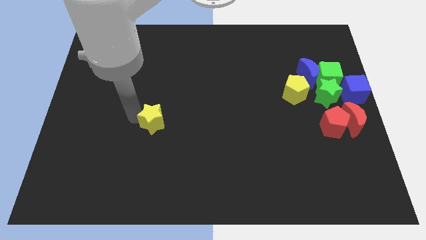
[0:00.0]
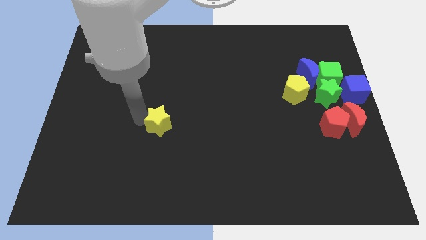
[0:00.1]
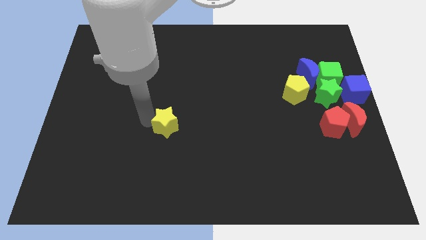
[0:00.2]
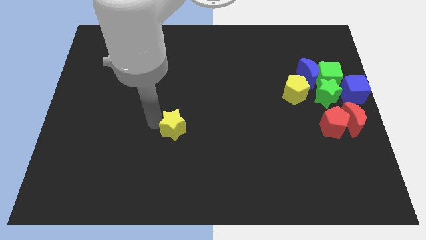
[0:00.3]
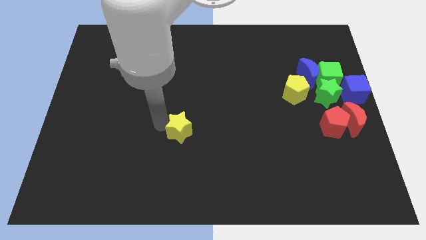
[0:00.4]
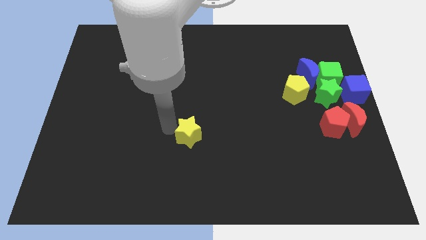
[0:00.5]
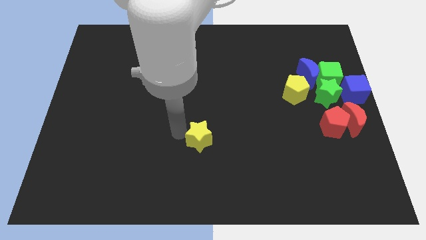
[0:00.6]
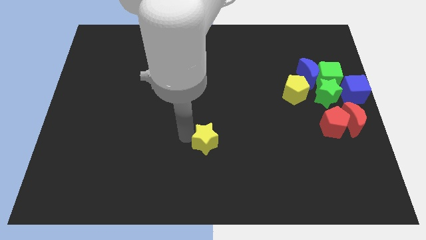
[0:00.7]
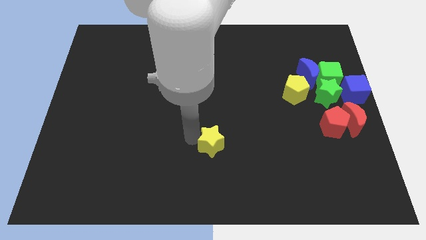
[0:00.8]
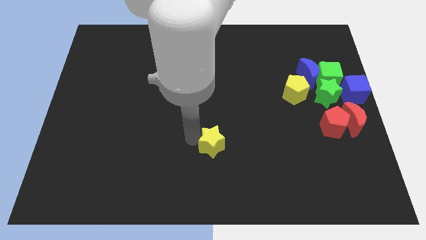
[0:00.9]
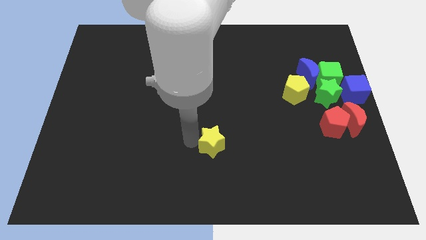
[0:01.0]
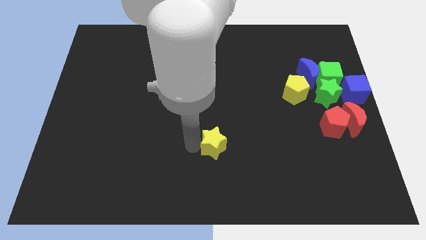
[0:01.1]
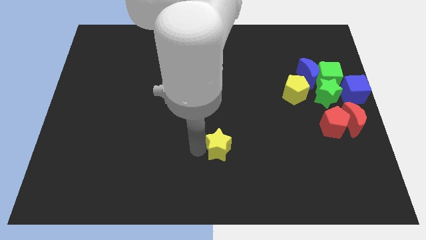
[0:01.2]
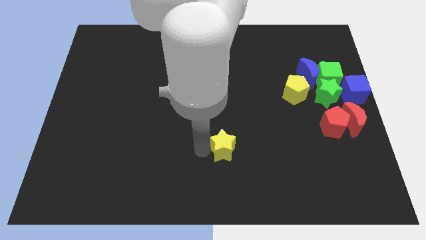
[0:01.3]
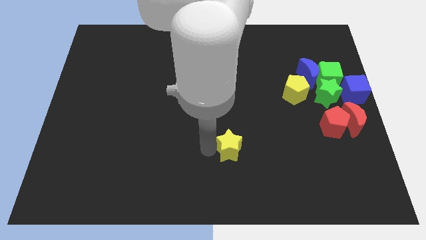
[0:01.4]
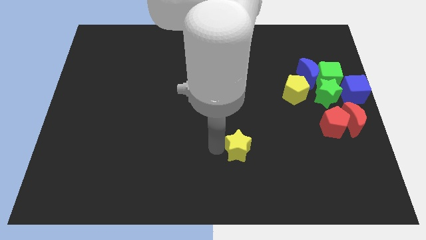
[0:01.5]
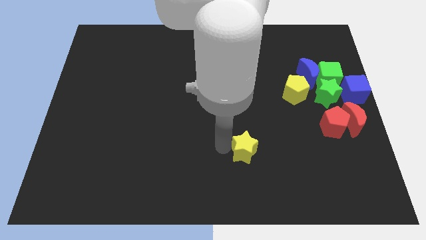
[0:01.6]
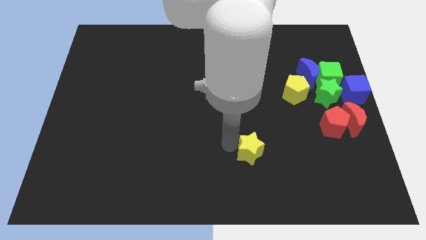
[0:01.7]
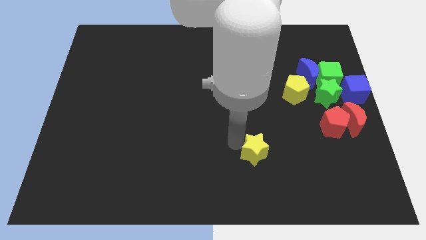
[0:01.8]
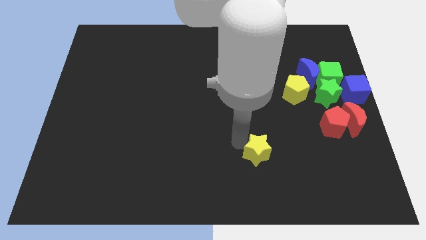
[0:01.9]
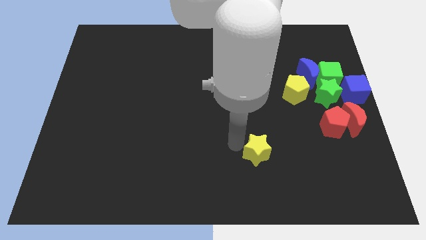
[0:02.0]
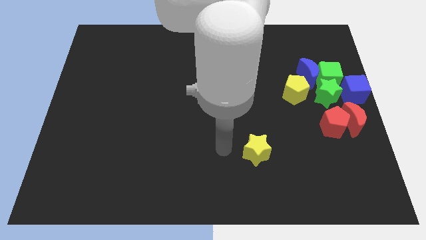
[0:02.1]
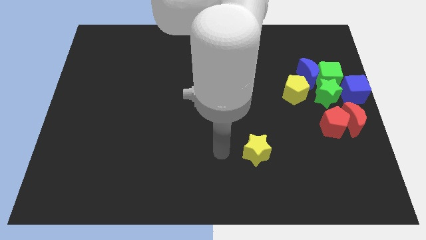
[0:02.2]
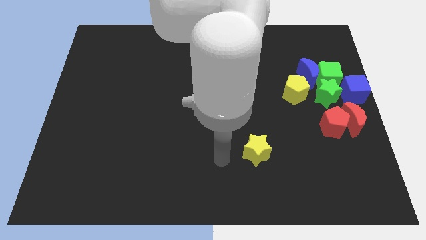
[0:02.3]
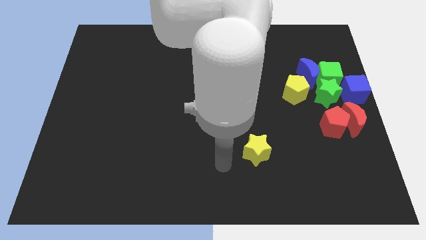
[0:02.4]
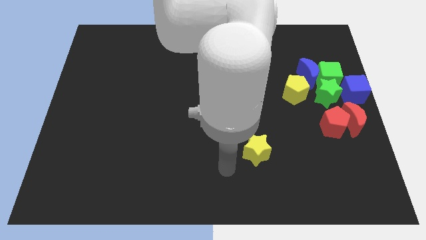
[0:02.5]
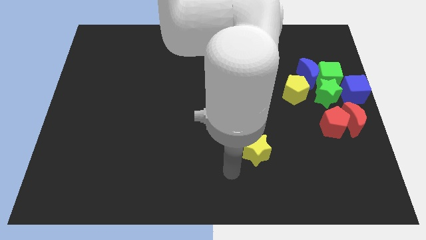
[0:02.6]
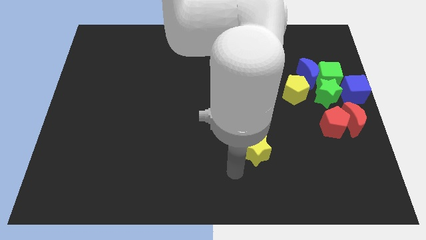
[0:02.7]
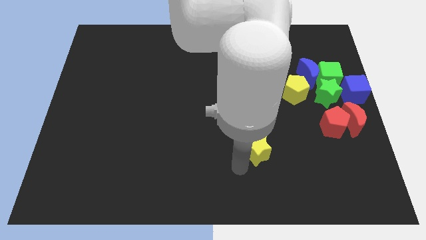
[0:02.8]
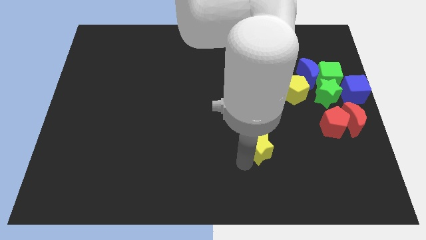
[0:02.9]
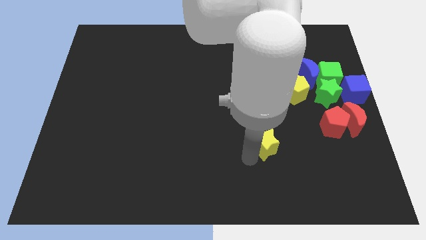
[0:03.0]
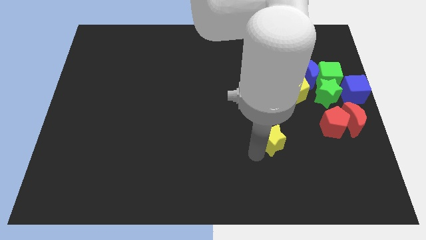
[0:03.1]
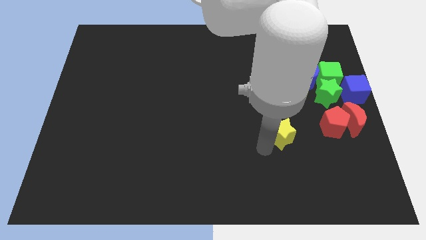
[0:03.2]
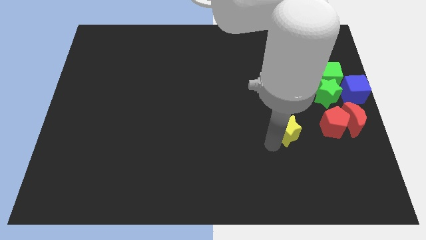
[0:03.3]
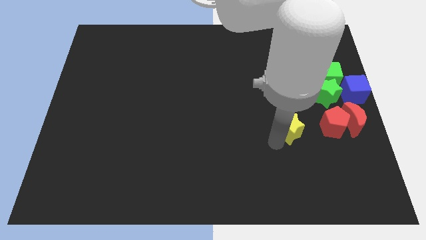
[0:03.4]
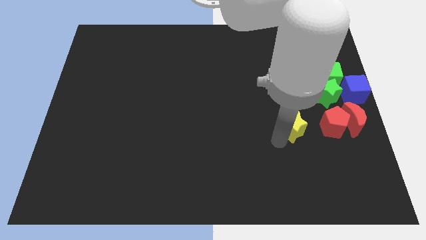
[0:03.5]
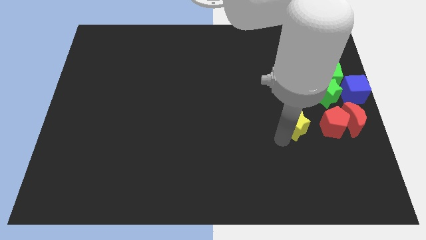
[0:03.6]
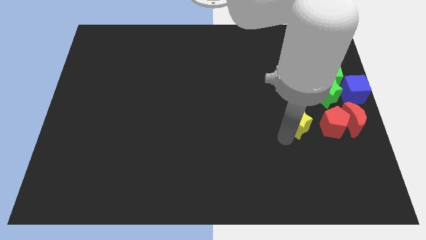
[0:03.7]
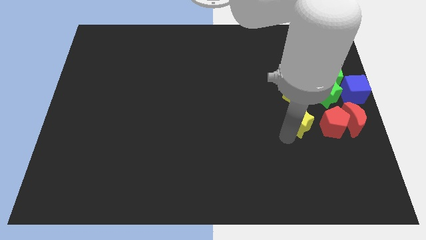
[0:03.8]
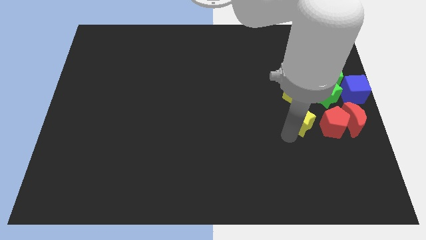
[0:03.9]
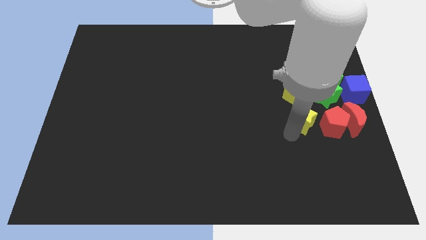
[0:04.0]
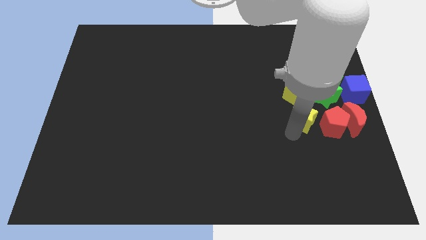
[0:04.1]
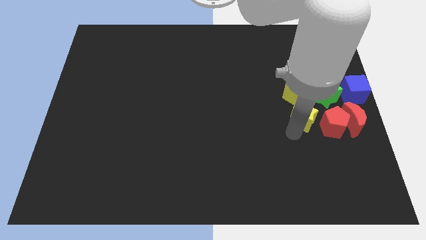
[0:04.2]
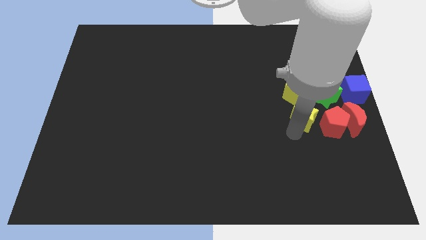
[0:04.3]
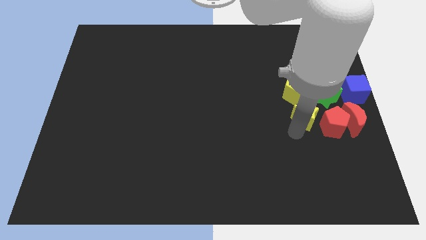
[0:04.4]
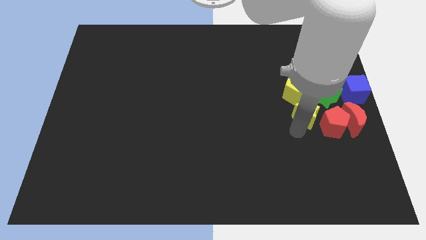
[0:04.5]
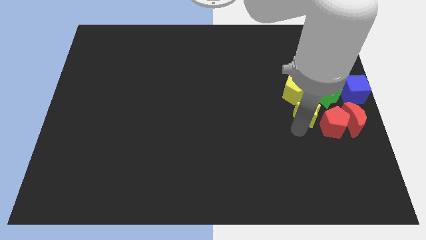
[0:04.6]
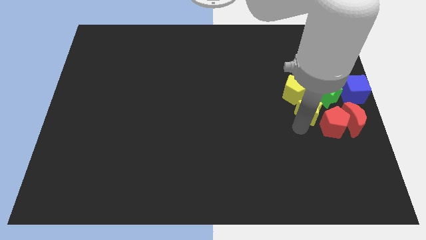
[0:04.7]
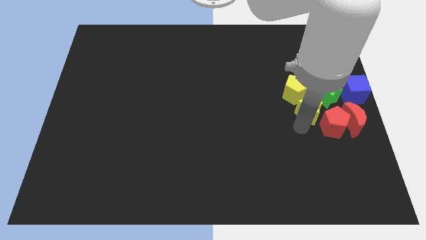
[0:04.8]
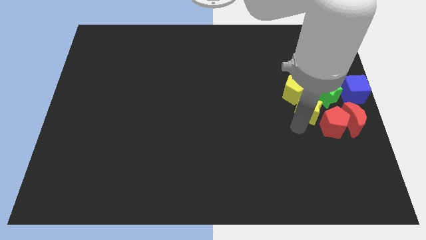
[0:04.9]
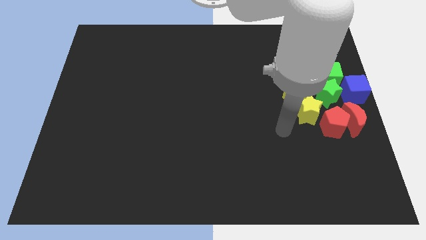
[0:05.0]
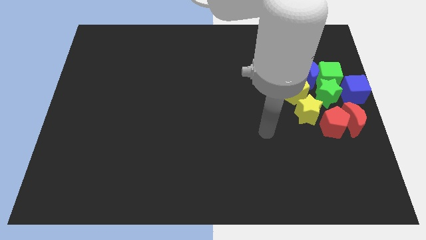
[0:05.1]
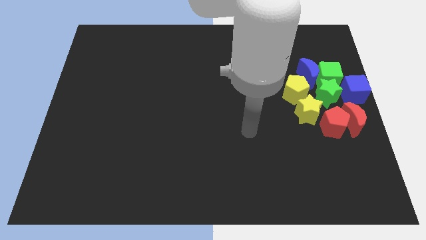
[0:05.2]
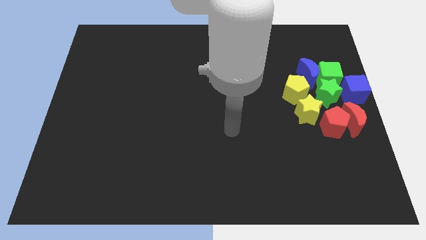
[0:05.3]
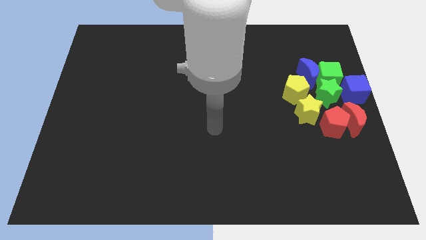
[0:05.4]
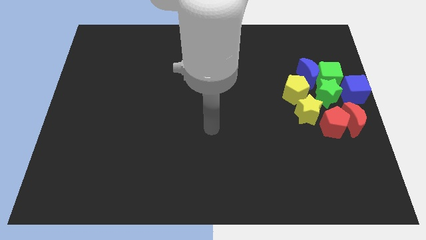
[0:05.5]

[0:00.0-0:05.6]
place the yellow star into the group of blocks

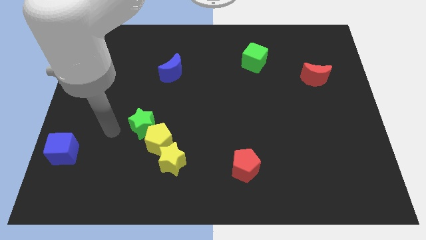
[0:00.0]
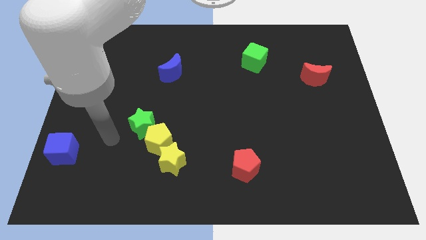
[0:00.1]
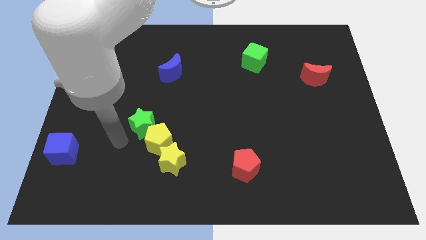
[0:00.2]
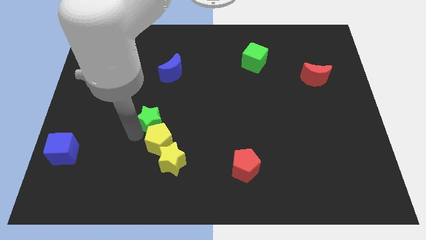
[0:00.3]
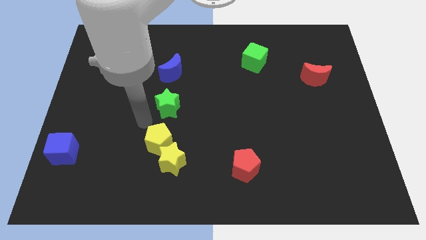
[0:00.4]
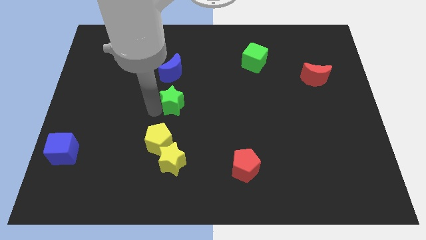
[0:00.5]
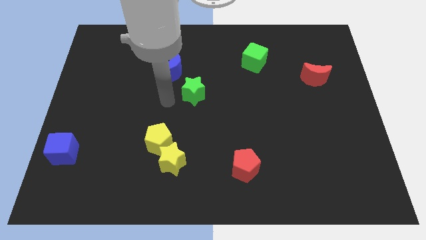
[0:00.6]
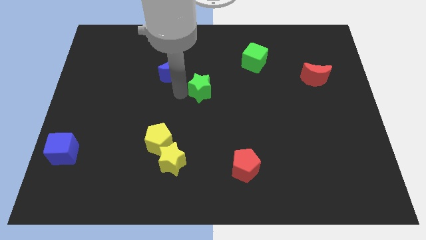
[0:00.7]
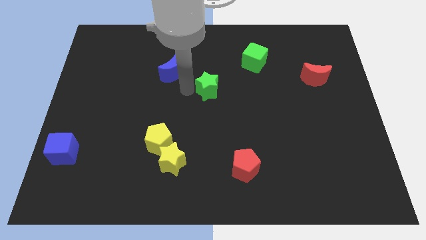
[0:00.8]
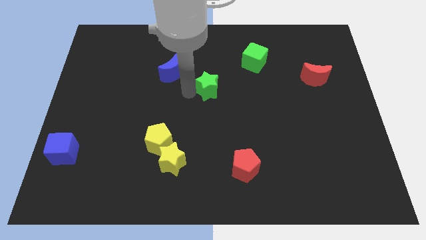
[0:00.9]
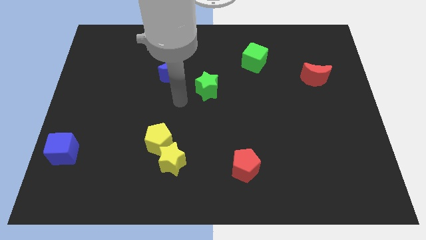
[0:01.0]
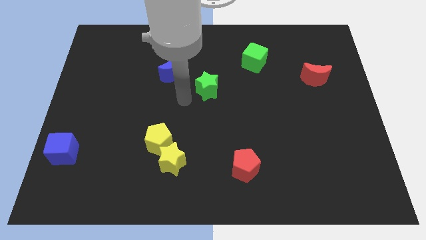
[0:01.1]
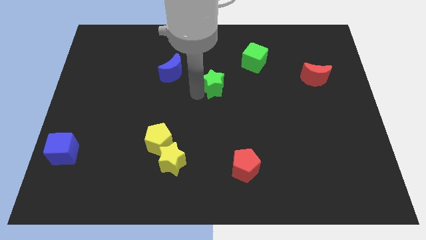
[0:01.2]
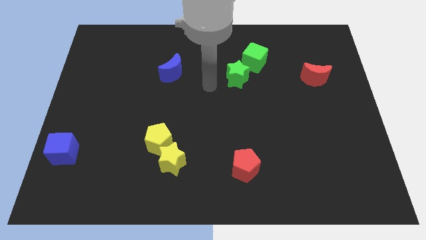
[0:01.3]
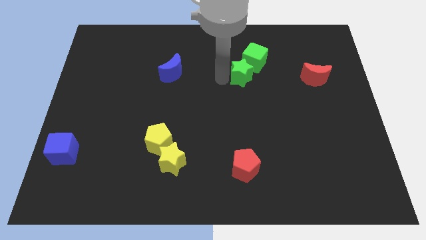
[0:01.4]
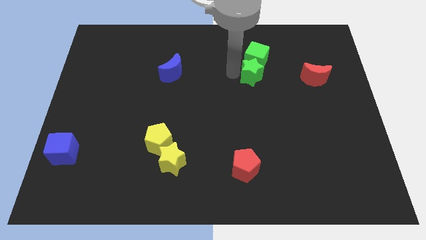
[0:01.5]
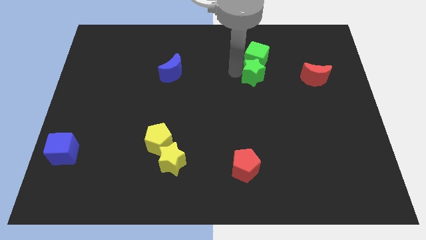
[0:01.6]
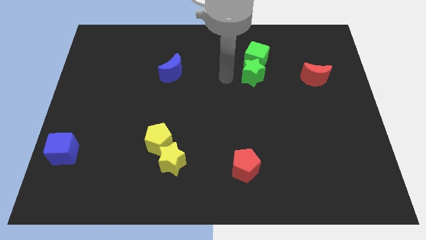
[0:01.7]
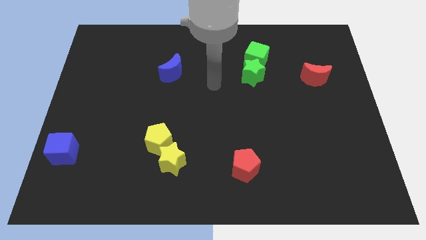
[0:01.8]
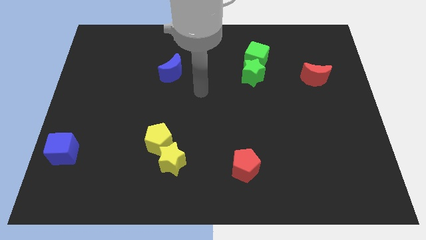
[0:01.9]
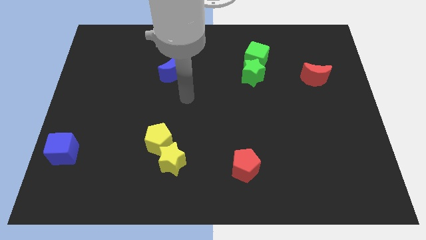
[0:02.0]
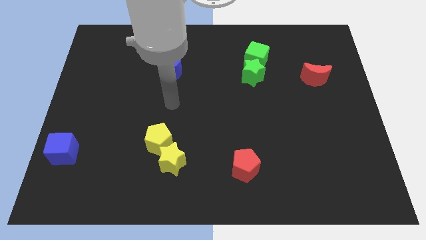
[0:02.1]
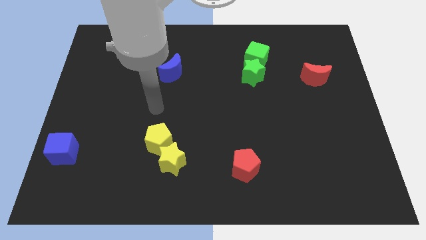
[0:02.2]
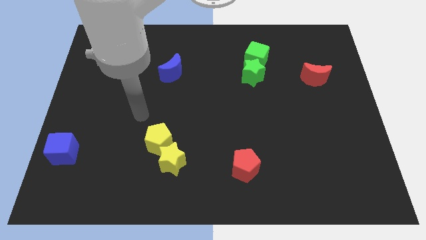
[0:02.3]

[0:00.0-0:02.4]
separate the green star from the yellow blocks

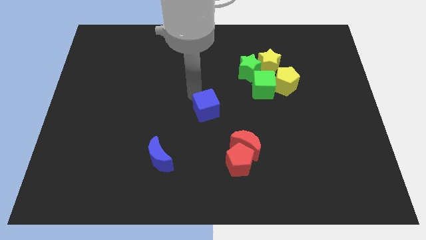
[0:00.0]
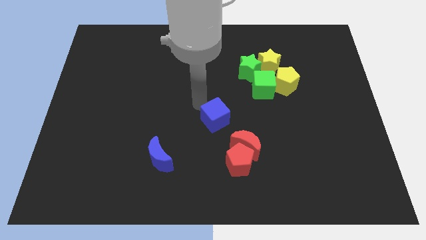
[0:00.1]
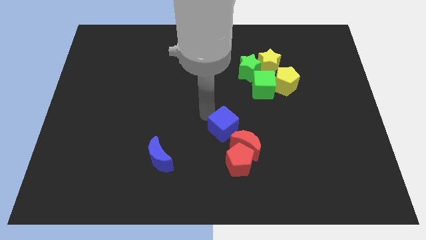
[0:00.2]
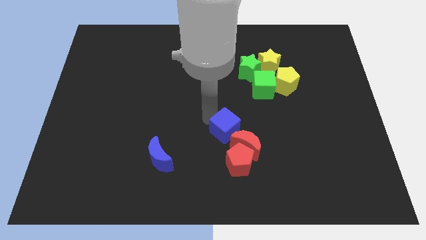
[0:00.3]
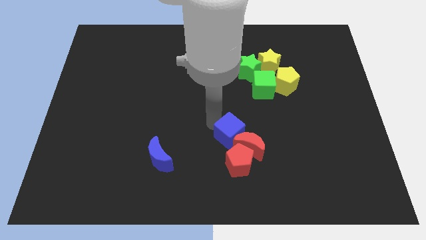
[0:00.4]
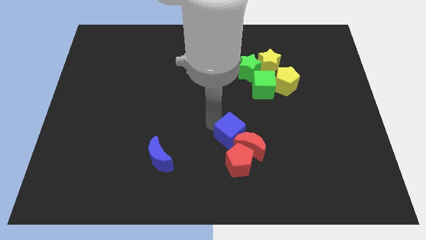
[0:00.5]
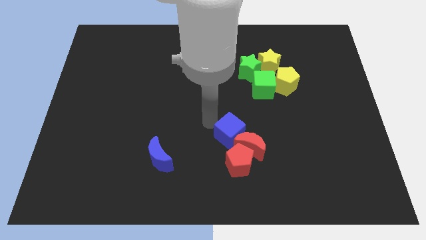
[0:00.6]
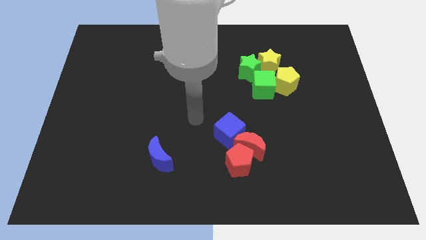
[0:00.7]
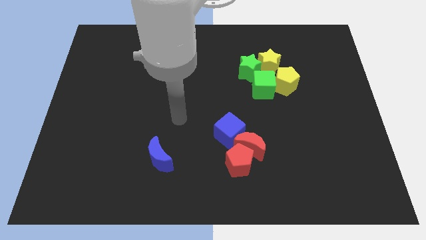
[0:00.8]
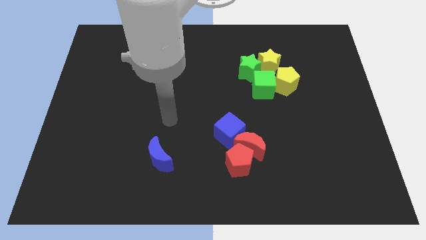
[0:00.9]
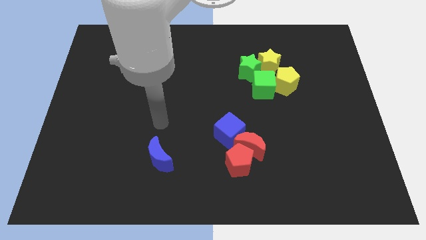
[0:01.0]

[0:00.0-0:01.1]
move the blue cube to the left of the red crescent
